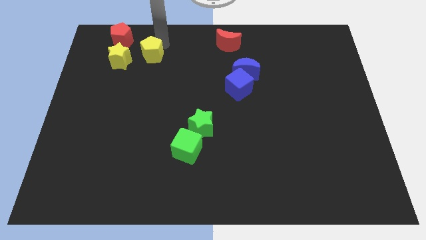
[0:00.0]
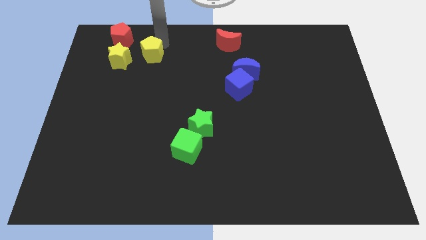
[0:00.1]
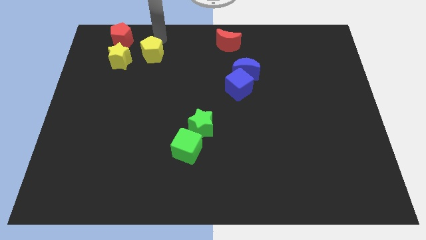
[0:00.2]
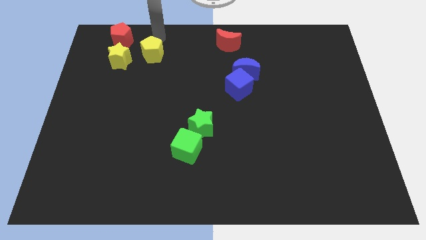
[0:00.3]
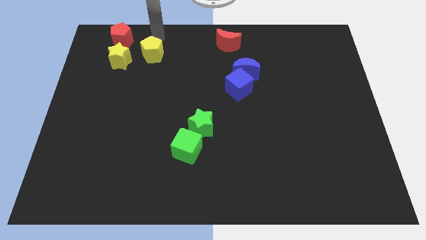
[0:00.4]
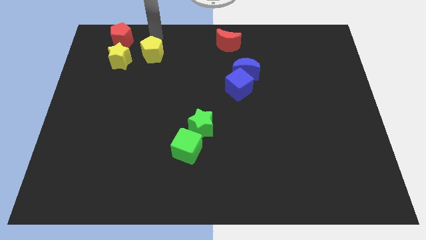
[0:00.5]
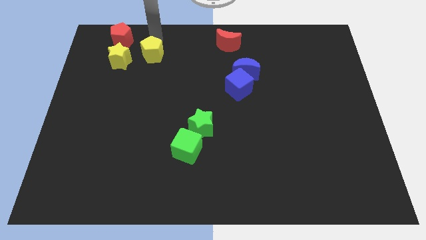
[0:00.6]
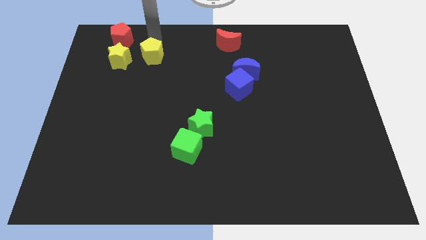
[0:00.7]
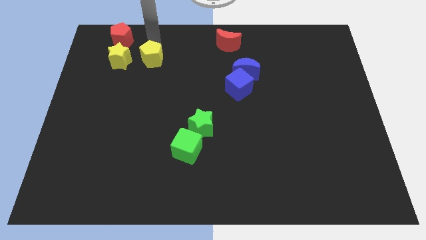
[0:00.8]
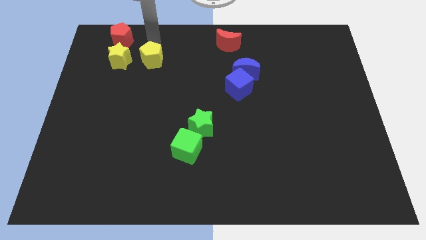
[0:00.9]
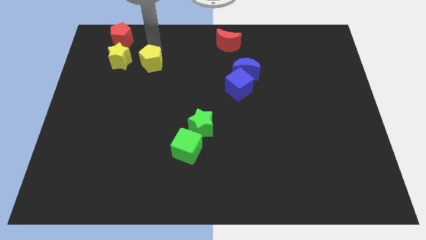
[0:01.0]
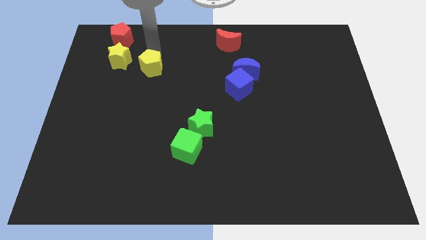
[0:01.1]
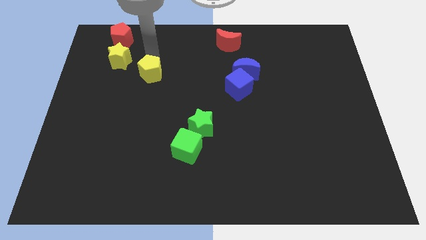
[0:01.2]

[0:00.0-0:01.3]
move the yellow pentagon right beside the yellow star

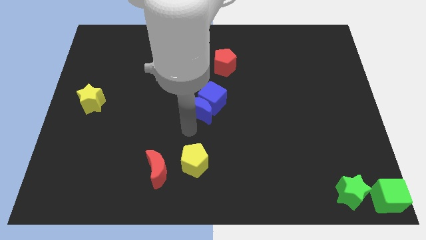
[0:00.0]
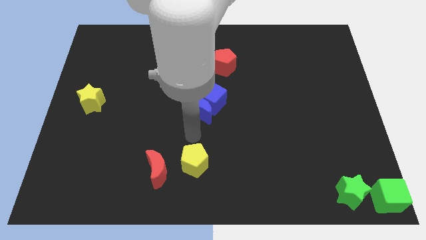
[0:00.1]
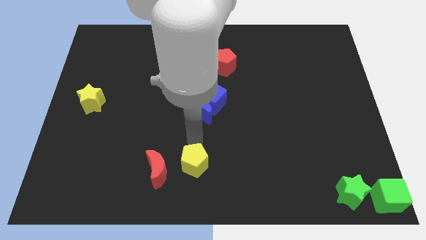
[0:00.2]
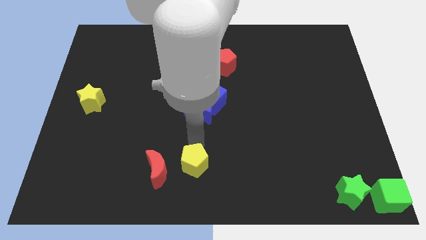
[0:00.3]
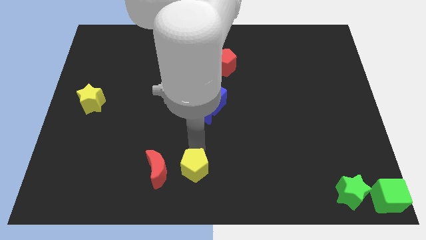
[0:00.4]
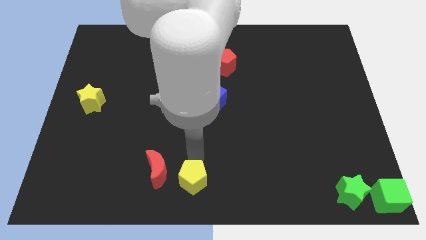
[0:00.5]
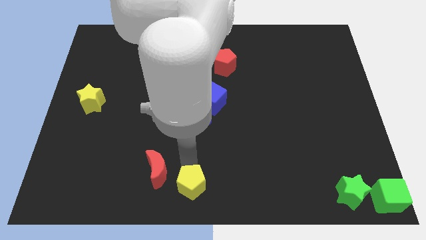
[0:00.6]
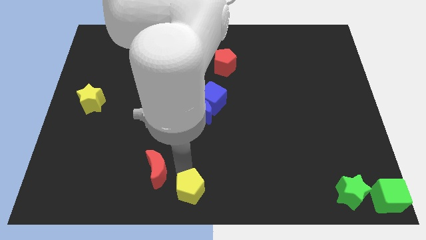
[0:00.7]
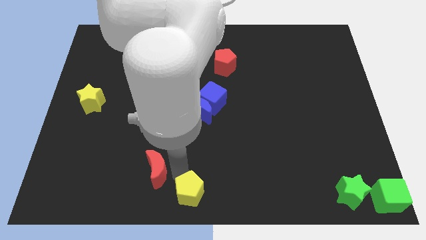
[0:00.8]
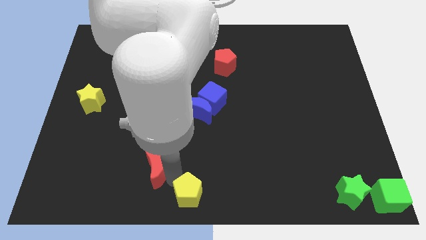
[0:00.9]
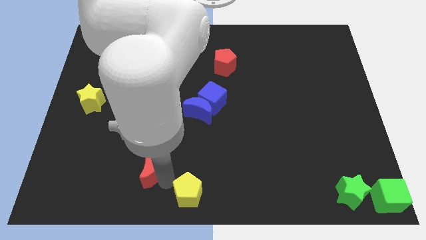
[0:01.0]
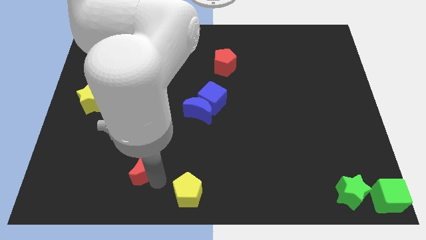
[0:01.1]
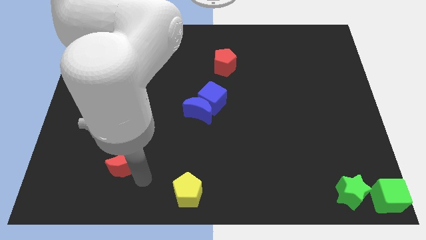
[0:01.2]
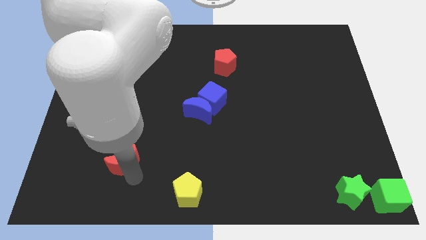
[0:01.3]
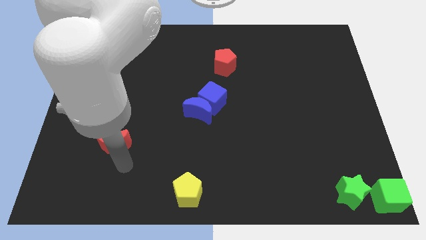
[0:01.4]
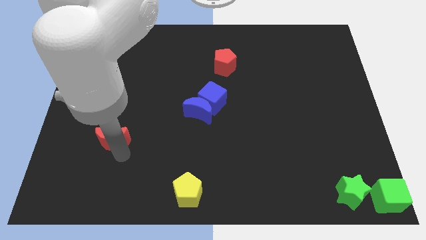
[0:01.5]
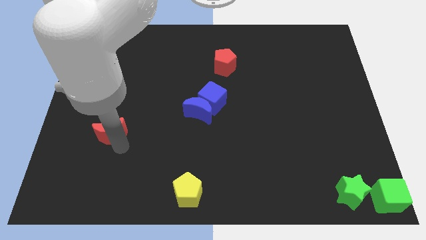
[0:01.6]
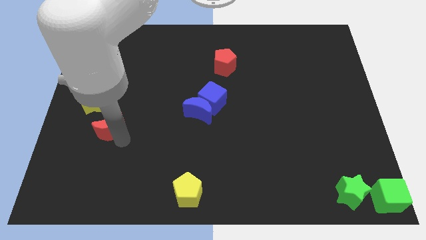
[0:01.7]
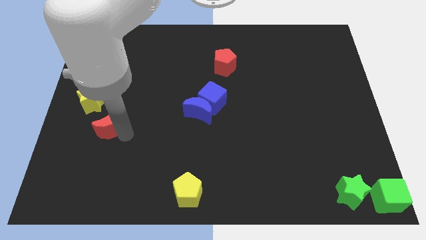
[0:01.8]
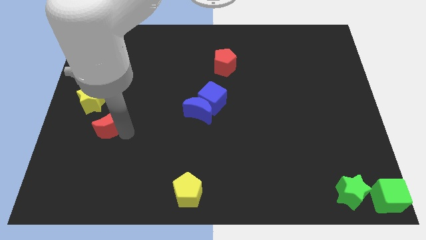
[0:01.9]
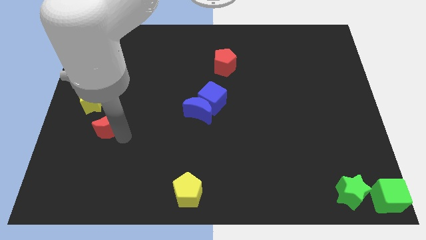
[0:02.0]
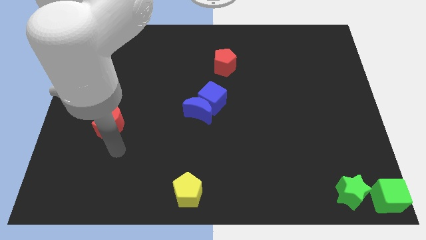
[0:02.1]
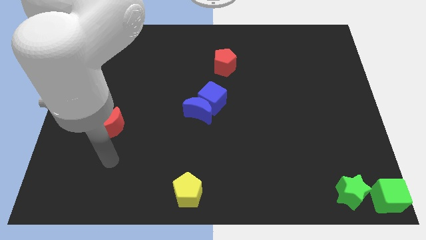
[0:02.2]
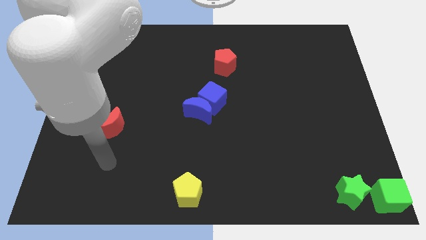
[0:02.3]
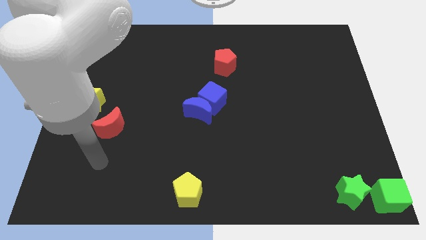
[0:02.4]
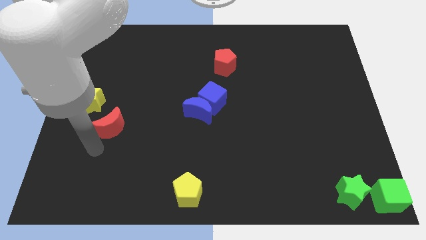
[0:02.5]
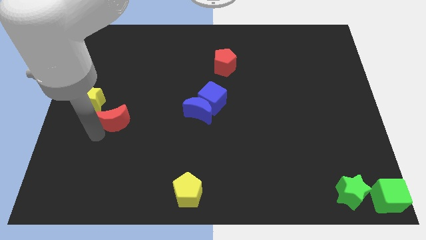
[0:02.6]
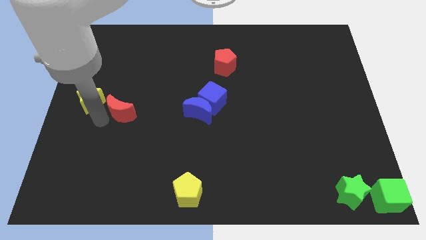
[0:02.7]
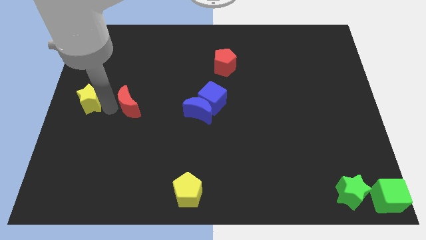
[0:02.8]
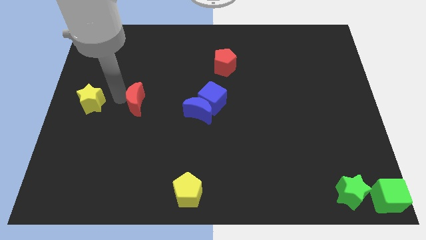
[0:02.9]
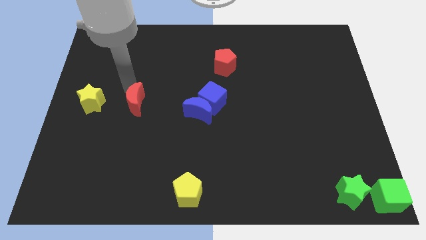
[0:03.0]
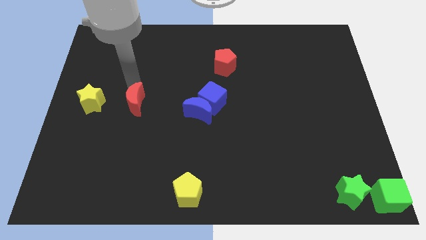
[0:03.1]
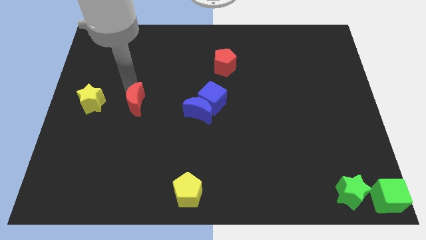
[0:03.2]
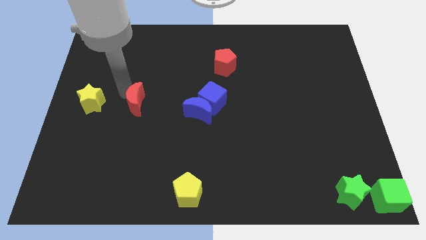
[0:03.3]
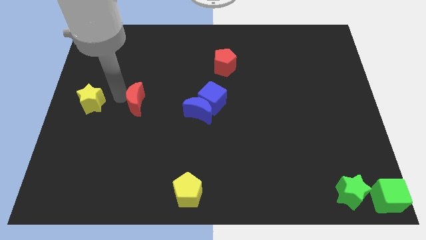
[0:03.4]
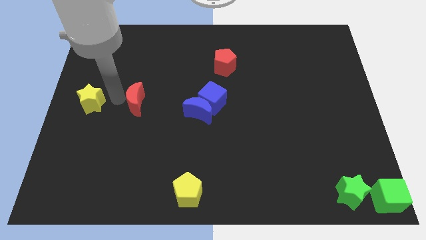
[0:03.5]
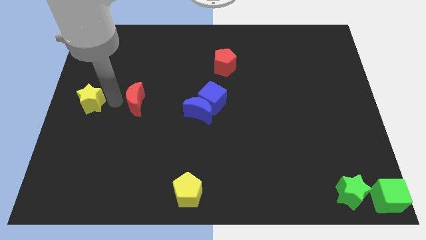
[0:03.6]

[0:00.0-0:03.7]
push the red crescent to the right of the yellow star

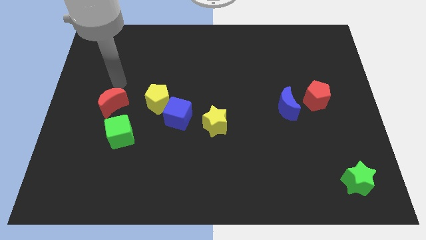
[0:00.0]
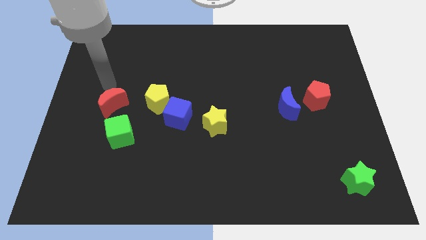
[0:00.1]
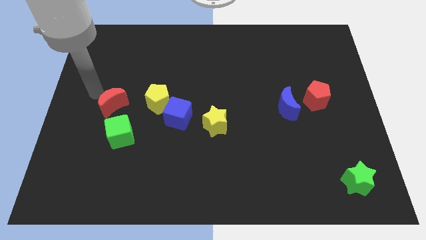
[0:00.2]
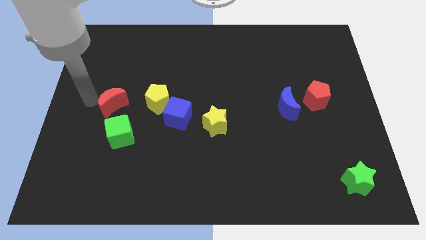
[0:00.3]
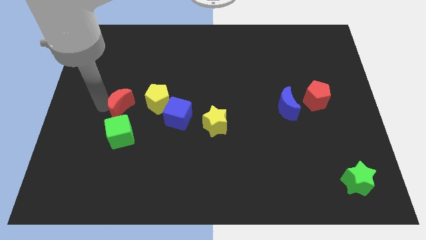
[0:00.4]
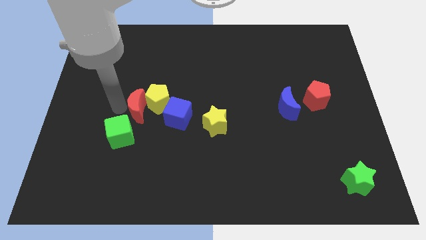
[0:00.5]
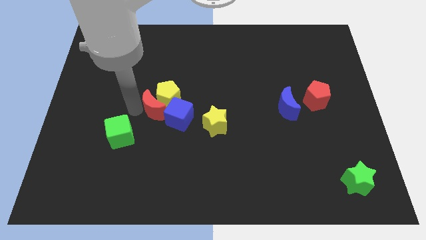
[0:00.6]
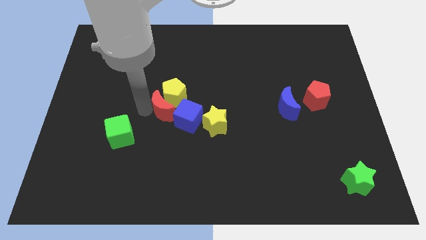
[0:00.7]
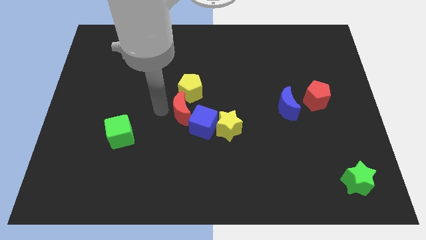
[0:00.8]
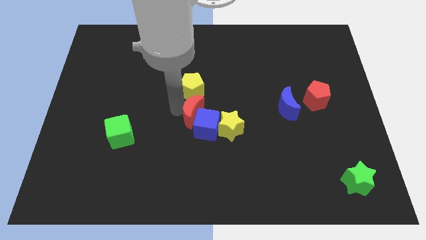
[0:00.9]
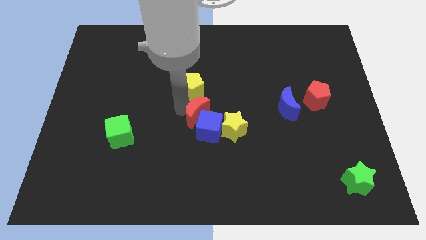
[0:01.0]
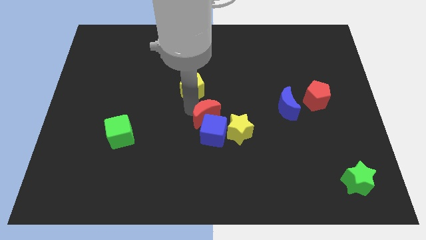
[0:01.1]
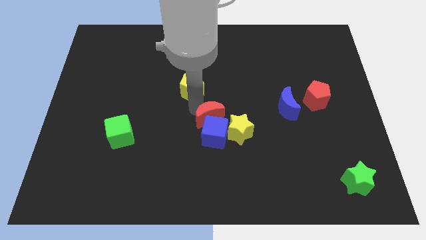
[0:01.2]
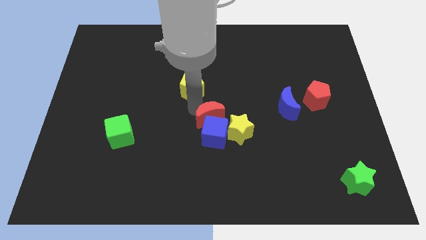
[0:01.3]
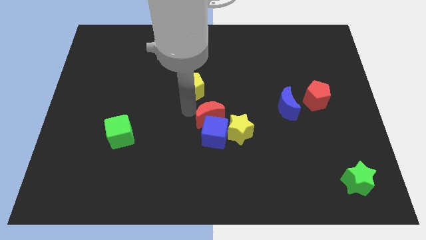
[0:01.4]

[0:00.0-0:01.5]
push the red crescent into the blue cube and yellow pentagon

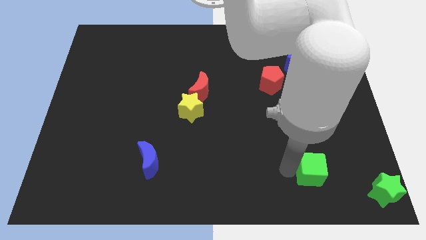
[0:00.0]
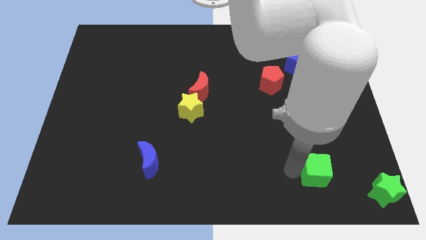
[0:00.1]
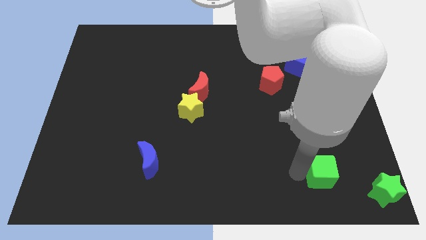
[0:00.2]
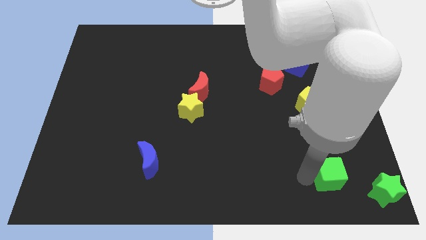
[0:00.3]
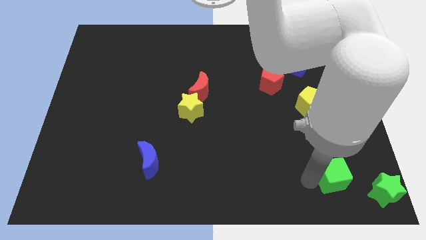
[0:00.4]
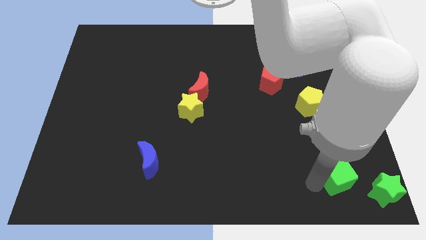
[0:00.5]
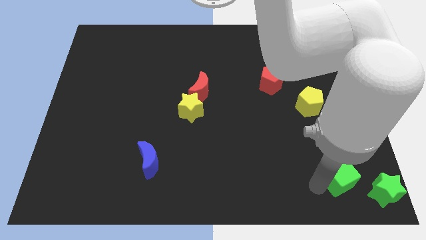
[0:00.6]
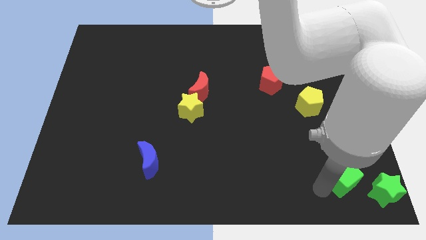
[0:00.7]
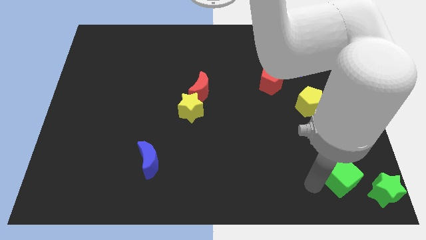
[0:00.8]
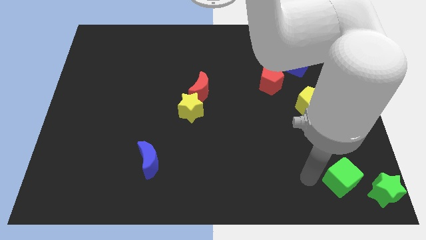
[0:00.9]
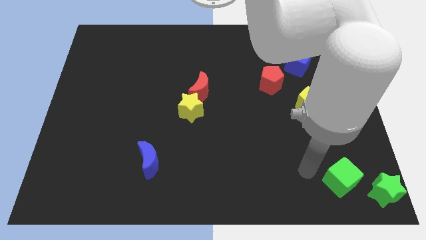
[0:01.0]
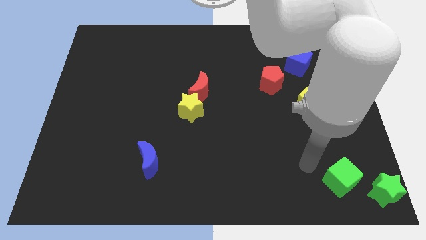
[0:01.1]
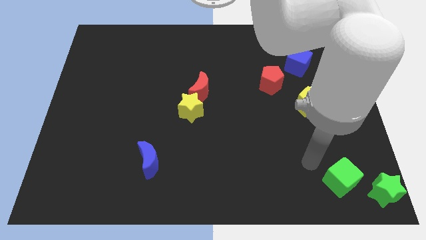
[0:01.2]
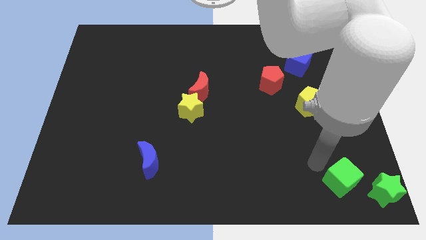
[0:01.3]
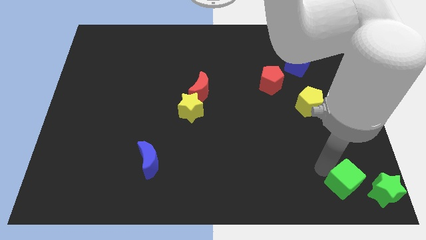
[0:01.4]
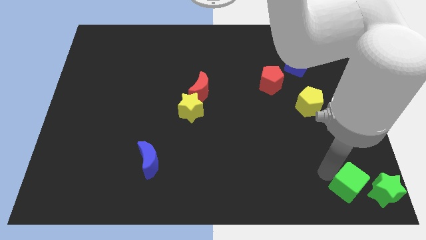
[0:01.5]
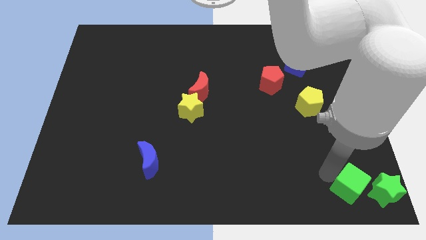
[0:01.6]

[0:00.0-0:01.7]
move the green cube to the left of the green star

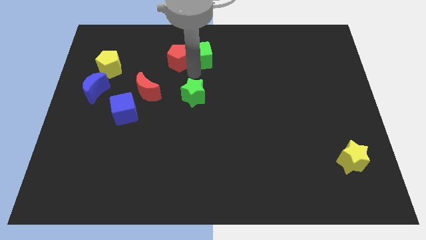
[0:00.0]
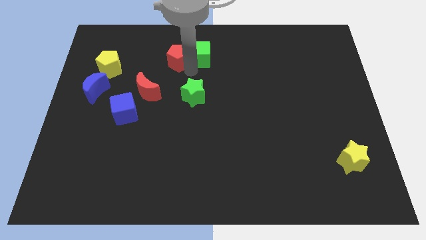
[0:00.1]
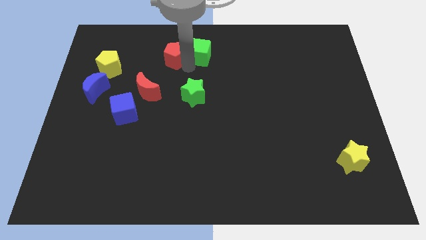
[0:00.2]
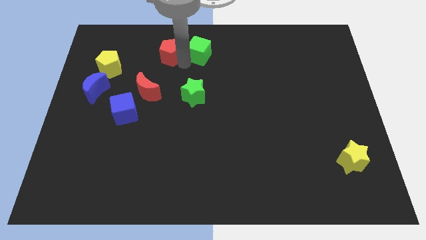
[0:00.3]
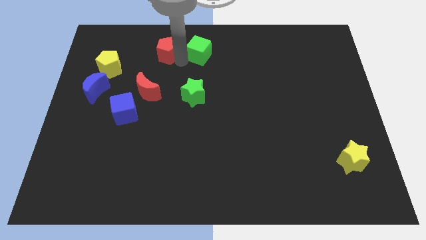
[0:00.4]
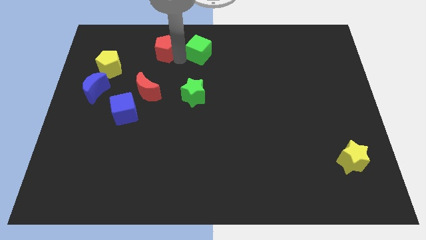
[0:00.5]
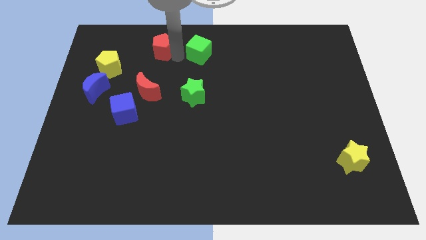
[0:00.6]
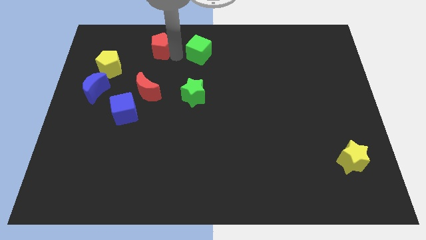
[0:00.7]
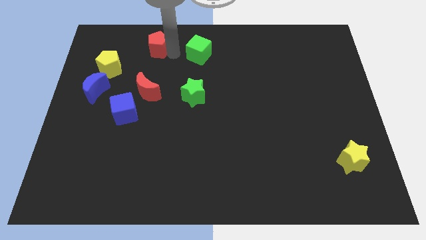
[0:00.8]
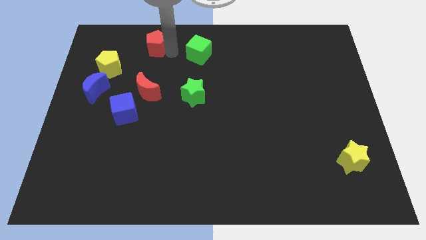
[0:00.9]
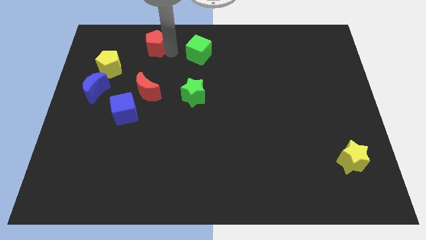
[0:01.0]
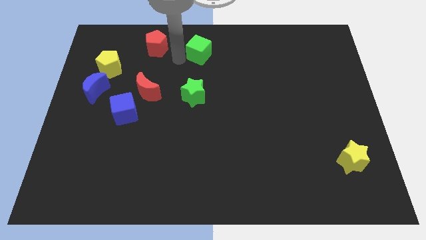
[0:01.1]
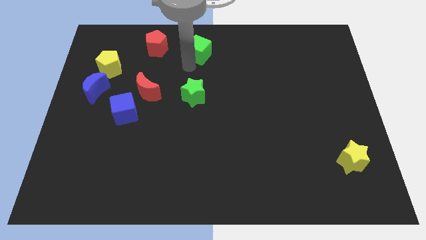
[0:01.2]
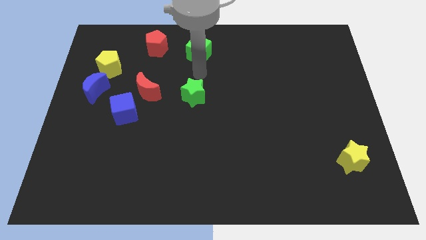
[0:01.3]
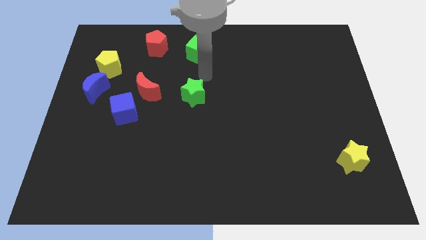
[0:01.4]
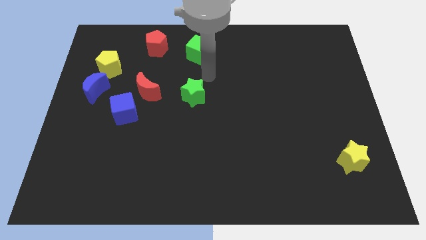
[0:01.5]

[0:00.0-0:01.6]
place red pentagon to the top of red moon
